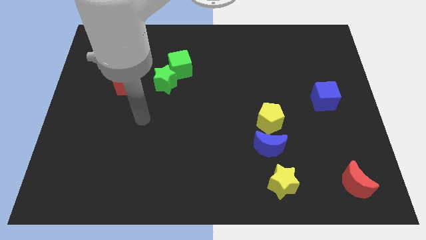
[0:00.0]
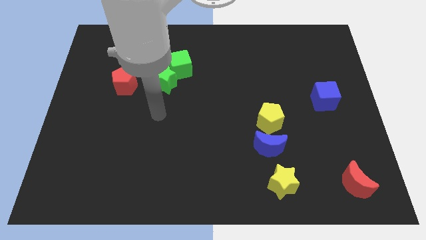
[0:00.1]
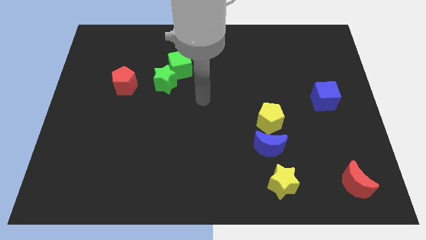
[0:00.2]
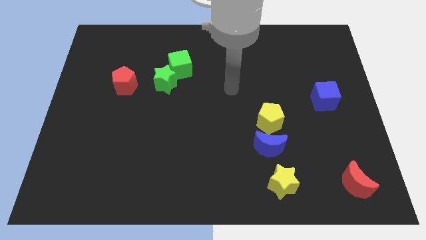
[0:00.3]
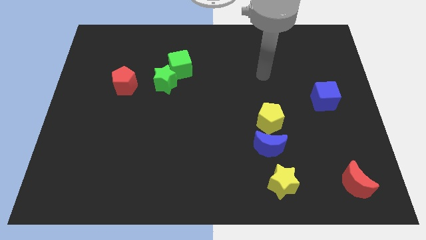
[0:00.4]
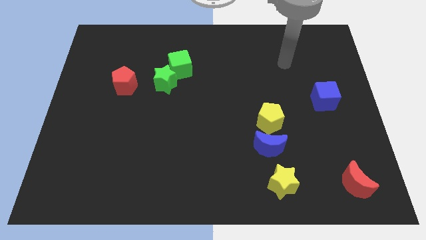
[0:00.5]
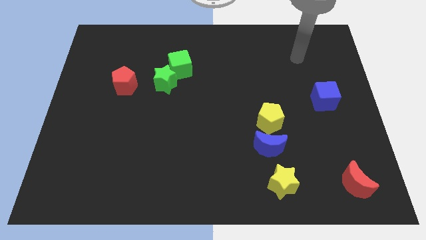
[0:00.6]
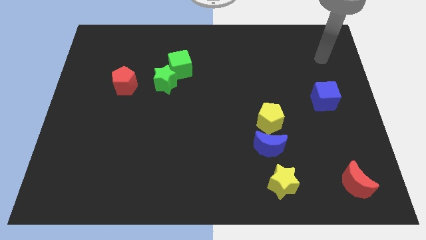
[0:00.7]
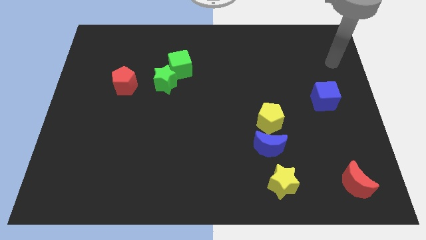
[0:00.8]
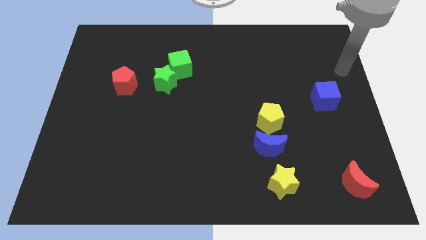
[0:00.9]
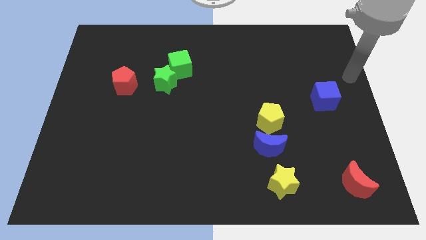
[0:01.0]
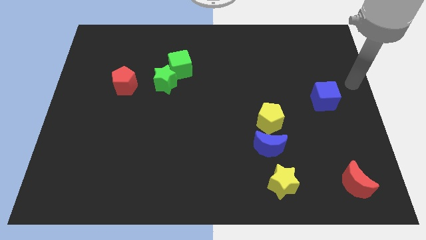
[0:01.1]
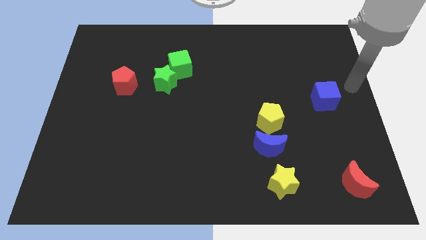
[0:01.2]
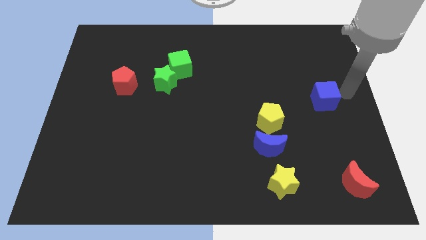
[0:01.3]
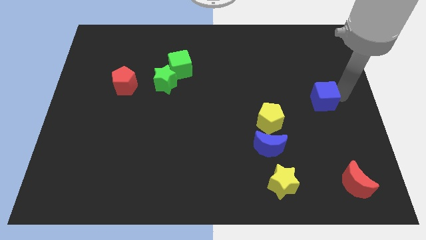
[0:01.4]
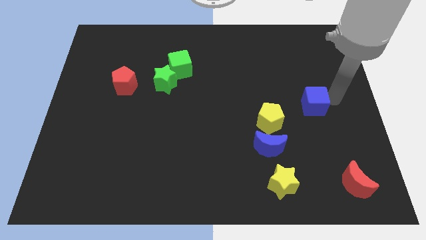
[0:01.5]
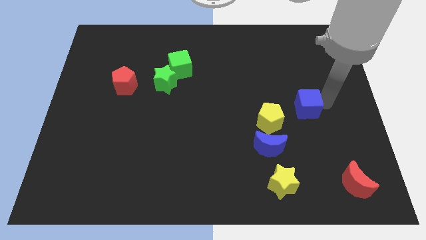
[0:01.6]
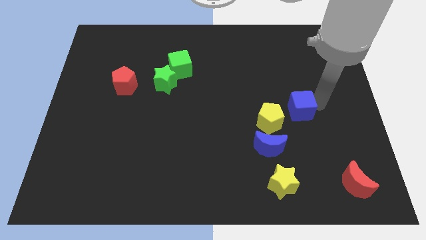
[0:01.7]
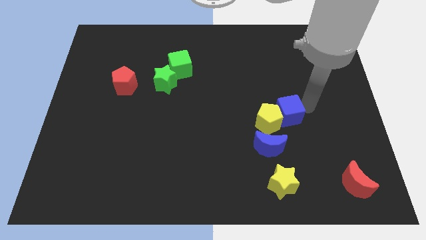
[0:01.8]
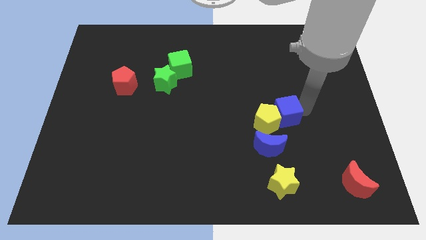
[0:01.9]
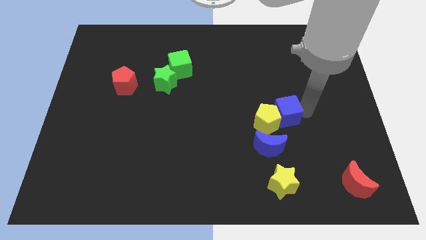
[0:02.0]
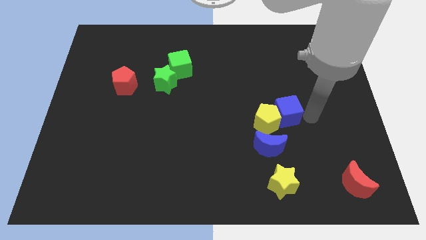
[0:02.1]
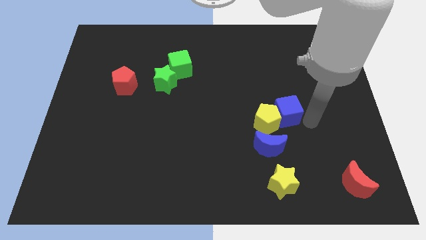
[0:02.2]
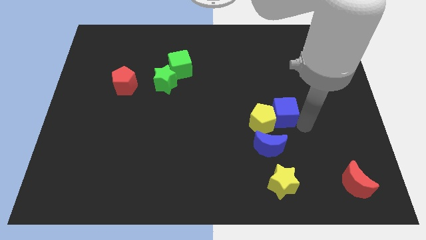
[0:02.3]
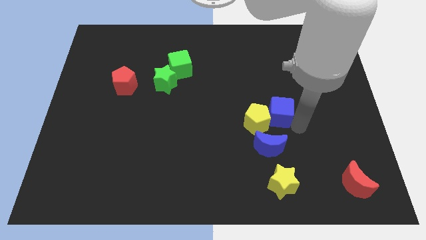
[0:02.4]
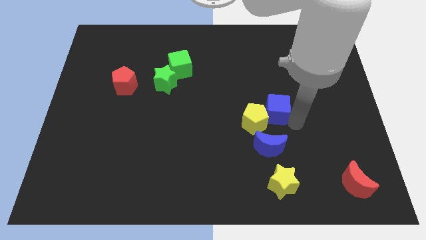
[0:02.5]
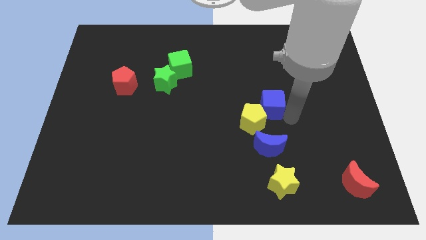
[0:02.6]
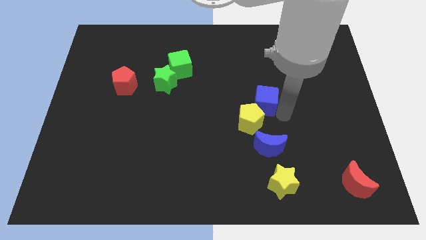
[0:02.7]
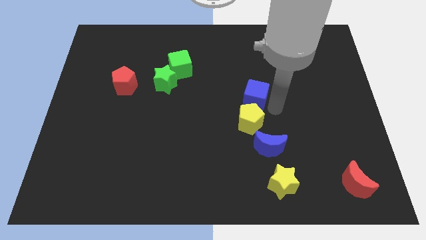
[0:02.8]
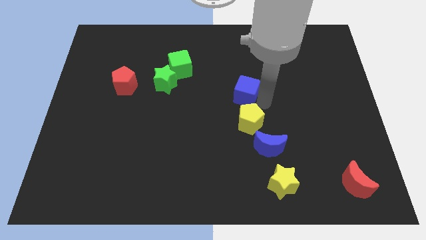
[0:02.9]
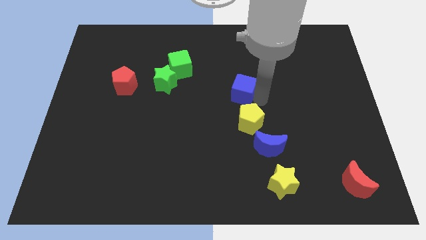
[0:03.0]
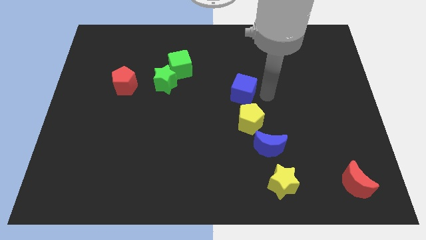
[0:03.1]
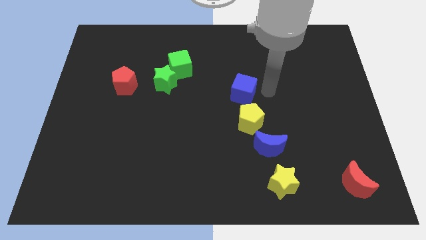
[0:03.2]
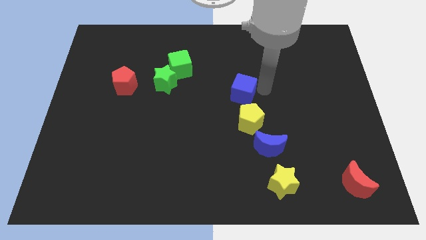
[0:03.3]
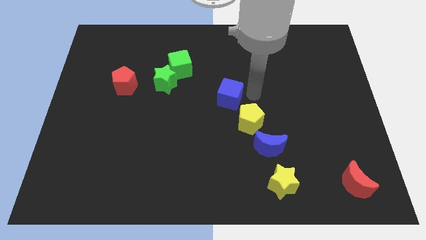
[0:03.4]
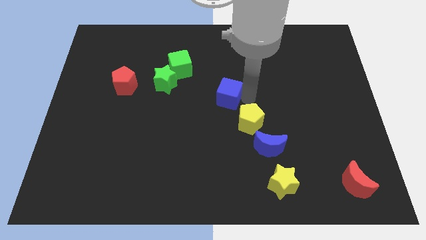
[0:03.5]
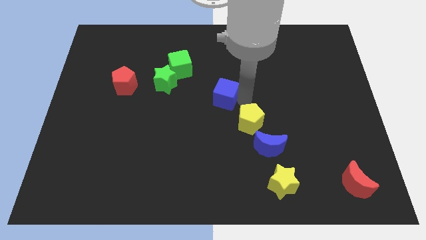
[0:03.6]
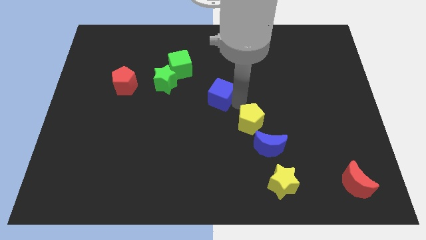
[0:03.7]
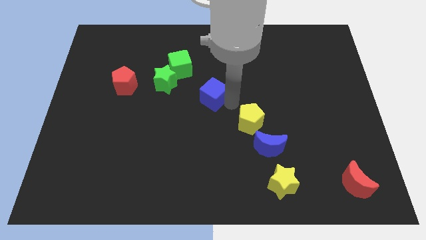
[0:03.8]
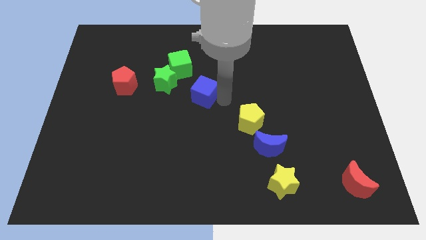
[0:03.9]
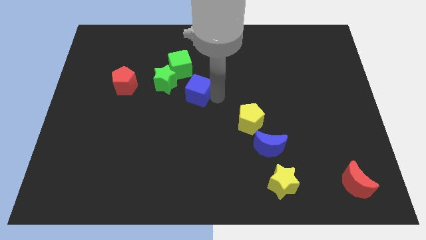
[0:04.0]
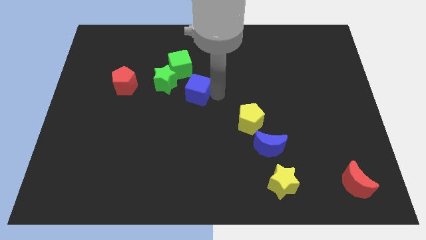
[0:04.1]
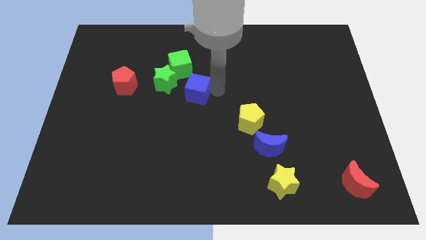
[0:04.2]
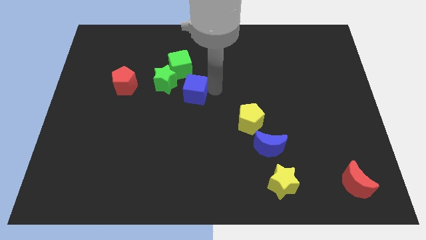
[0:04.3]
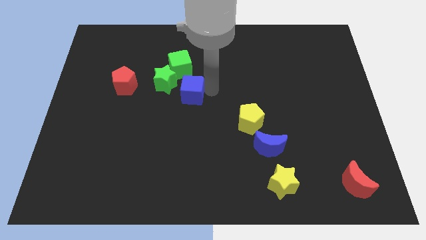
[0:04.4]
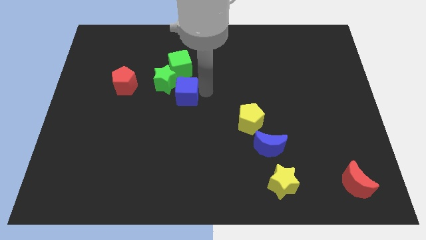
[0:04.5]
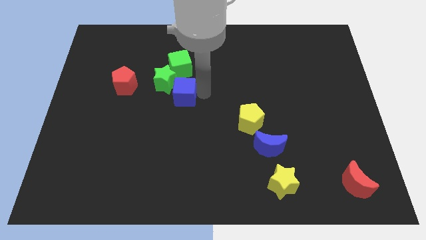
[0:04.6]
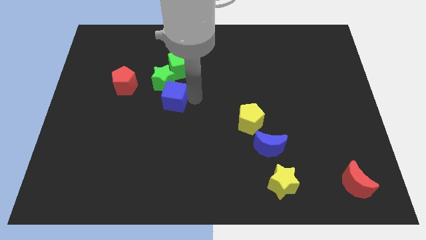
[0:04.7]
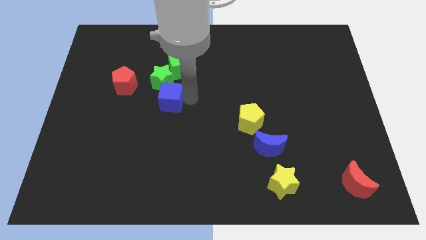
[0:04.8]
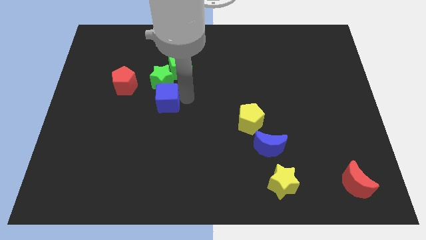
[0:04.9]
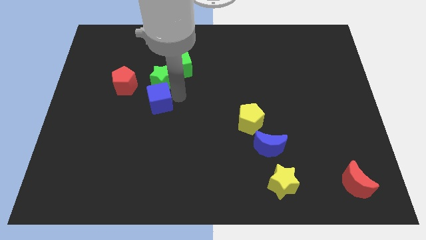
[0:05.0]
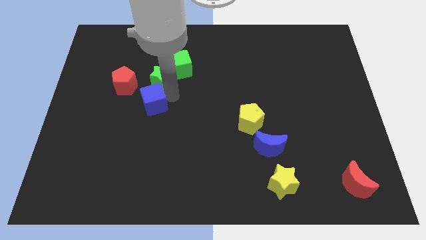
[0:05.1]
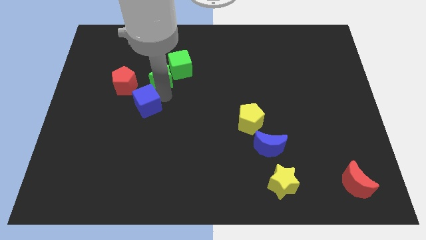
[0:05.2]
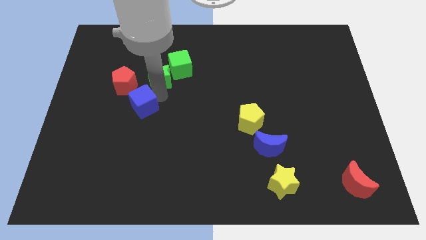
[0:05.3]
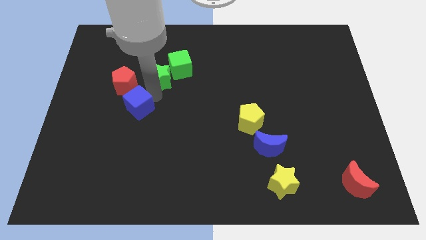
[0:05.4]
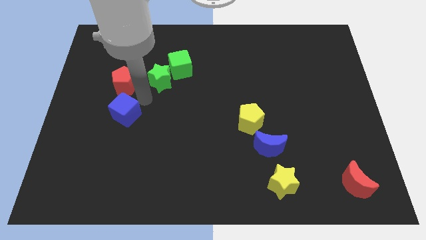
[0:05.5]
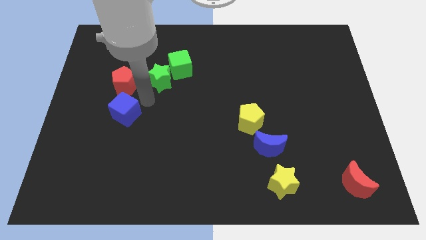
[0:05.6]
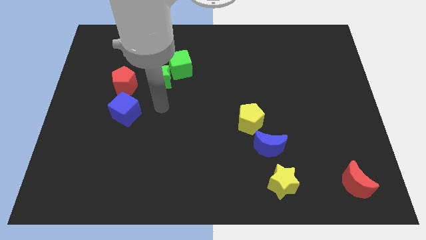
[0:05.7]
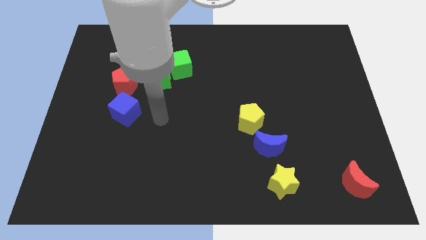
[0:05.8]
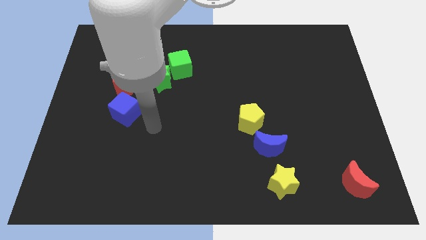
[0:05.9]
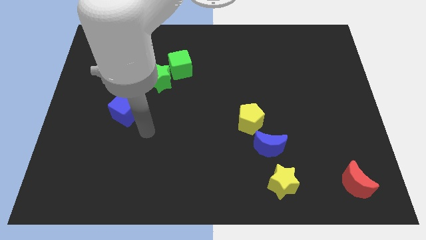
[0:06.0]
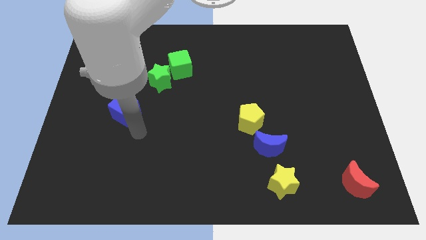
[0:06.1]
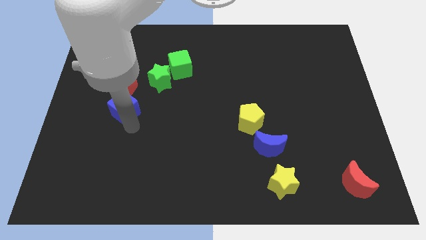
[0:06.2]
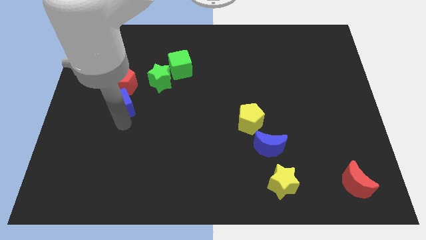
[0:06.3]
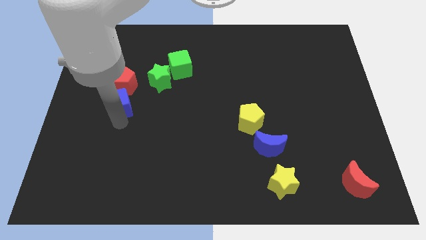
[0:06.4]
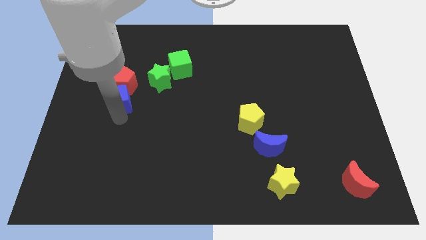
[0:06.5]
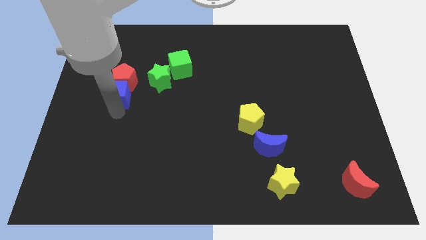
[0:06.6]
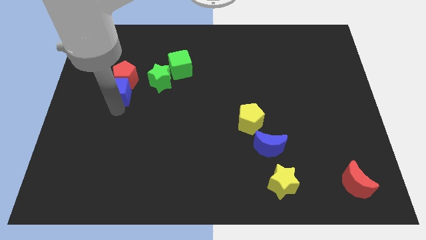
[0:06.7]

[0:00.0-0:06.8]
move the blue cube close to the red pentagon

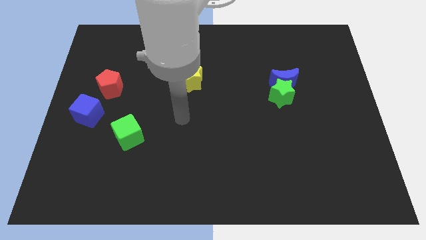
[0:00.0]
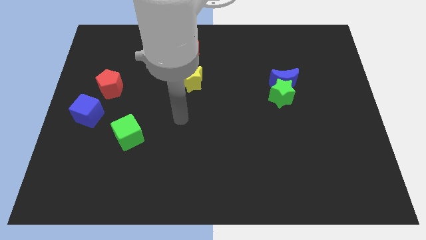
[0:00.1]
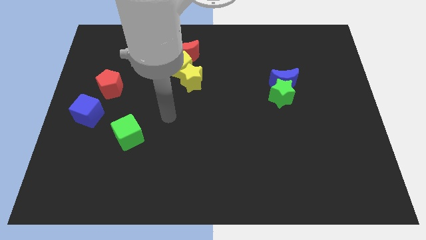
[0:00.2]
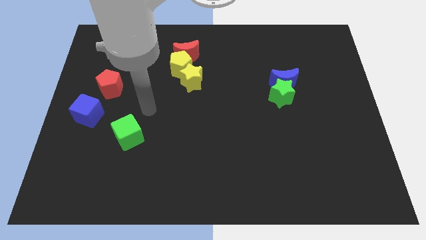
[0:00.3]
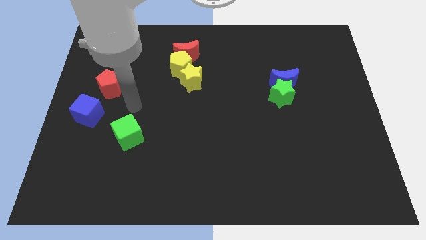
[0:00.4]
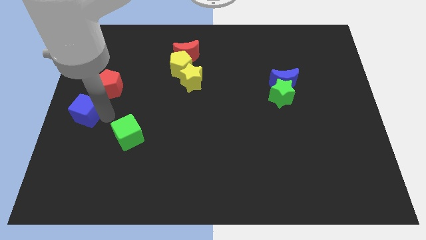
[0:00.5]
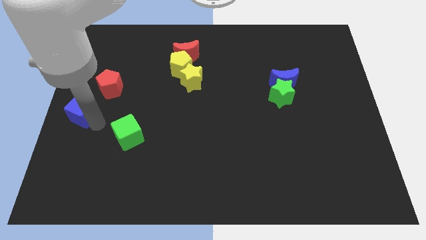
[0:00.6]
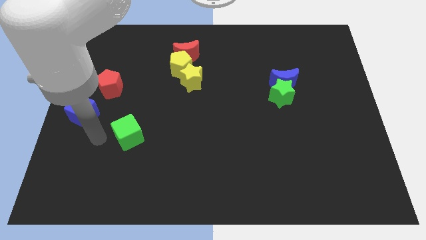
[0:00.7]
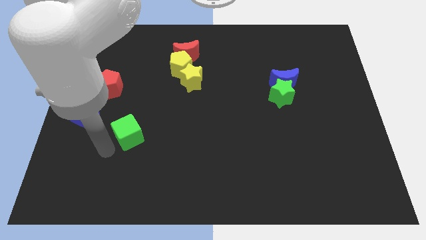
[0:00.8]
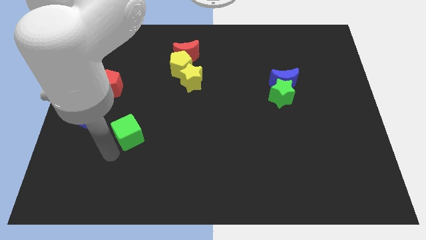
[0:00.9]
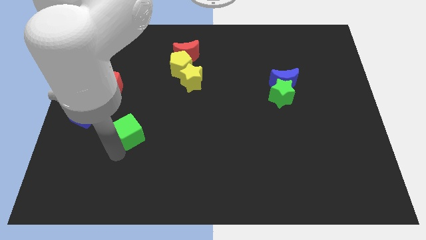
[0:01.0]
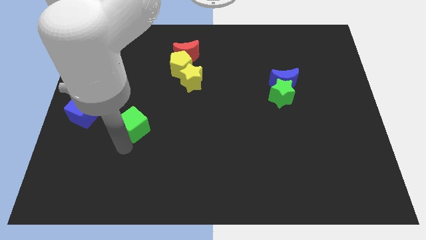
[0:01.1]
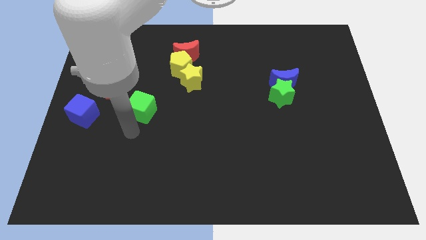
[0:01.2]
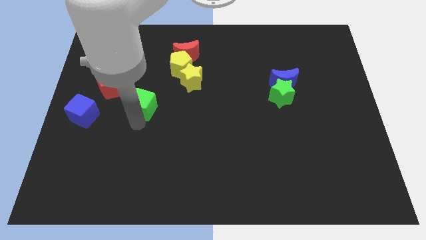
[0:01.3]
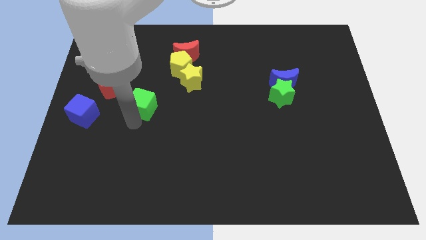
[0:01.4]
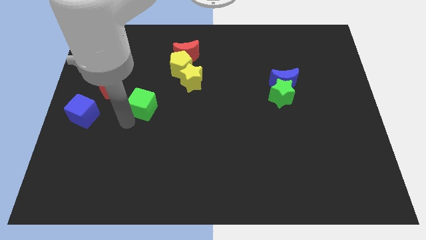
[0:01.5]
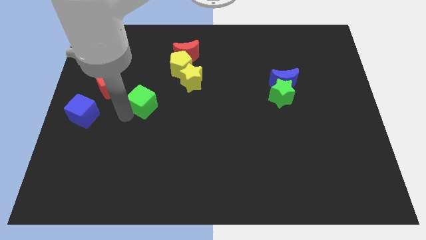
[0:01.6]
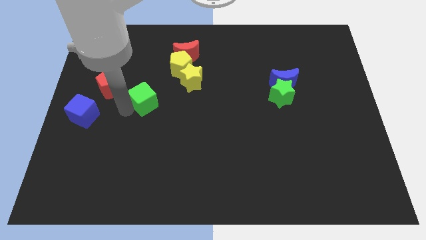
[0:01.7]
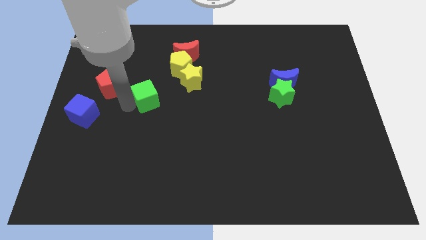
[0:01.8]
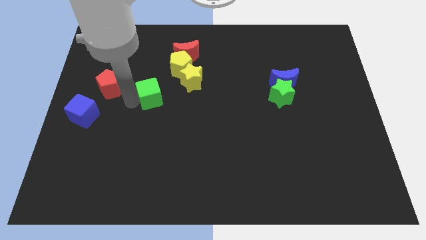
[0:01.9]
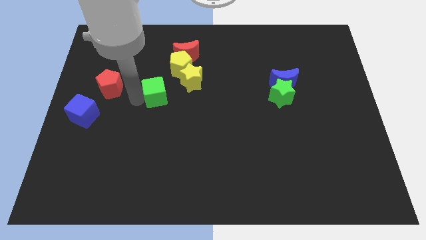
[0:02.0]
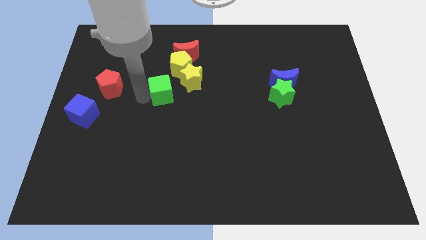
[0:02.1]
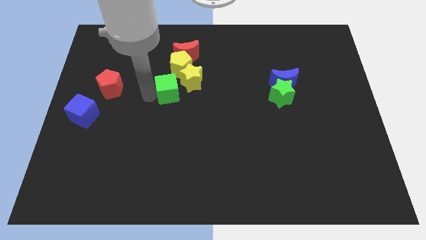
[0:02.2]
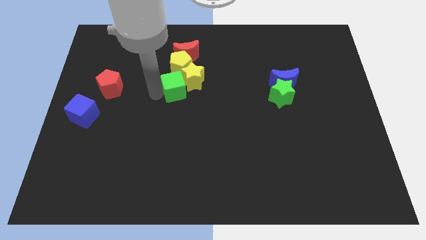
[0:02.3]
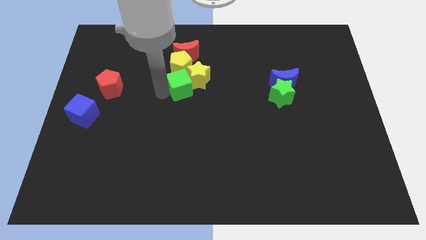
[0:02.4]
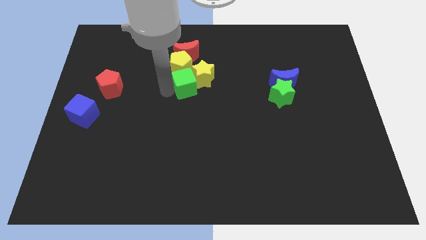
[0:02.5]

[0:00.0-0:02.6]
push the green cube next to the yellow star
